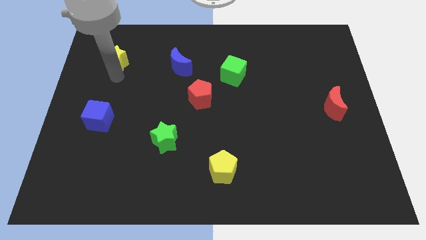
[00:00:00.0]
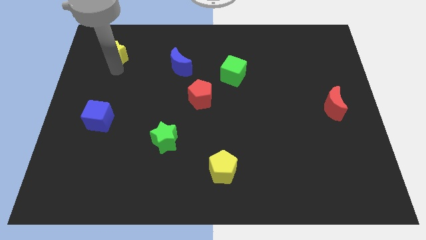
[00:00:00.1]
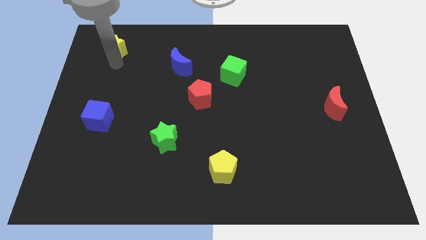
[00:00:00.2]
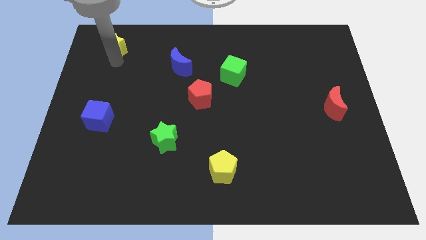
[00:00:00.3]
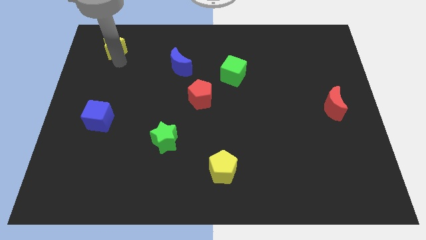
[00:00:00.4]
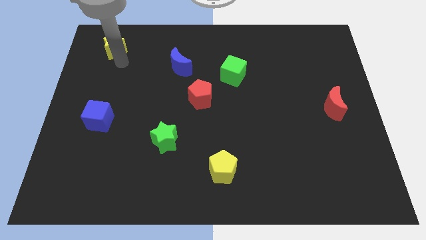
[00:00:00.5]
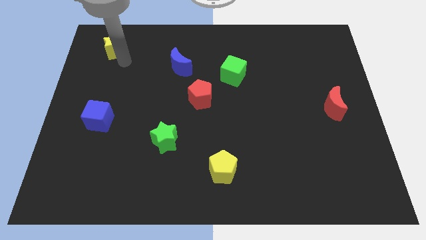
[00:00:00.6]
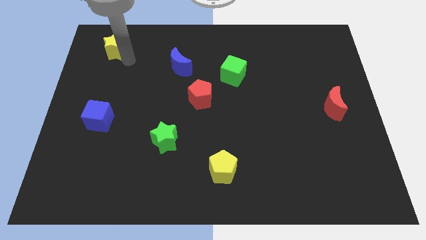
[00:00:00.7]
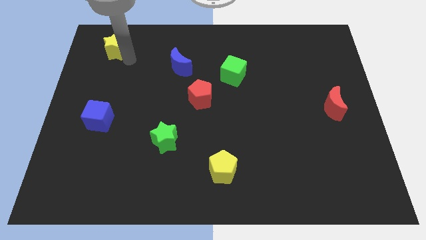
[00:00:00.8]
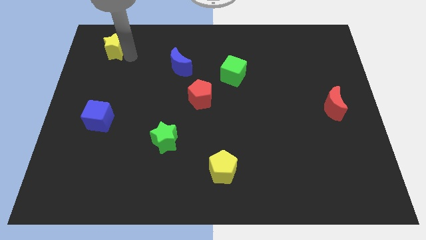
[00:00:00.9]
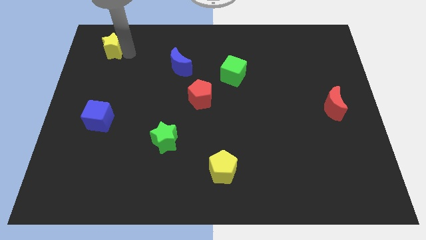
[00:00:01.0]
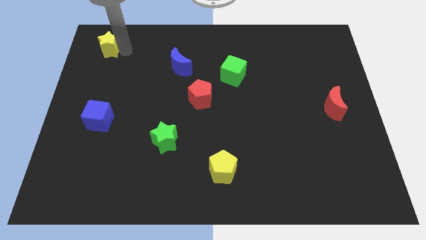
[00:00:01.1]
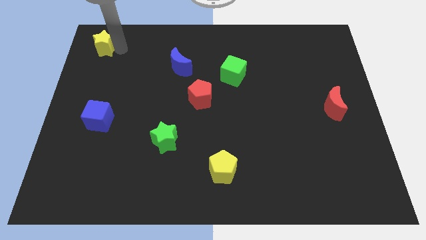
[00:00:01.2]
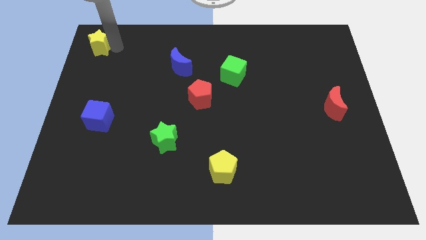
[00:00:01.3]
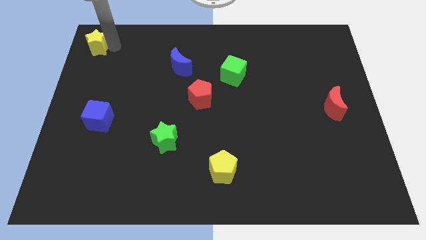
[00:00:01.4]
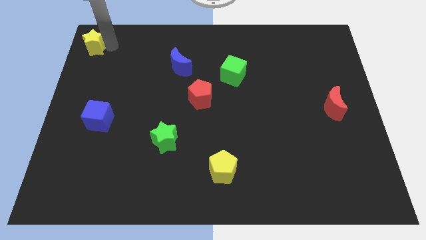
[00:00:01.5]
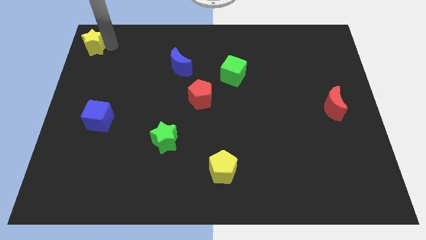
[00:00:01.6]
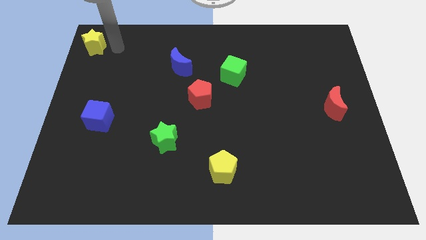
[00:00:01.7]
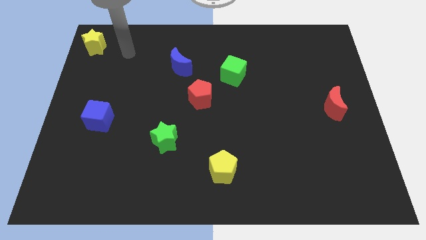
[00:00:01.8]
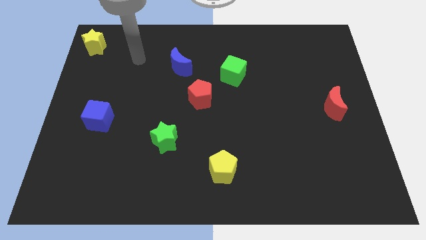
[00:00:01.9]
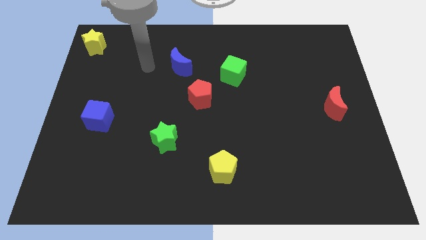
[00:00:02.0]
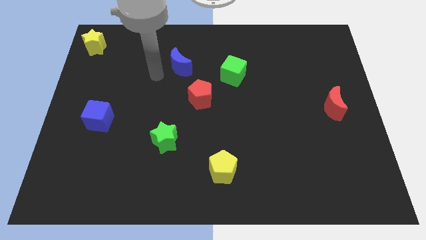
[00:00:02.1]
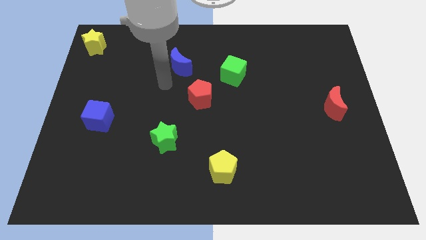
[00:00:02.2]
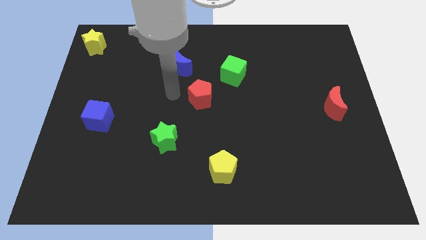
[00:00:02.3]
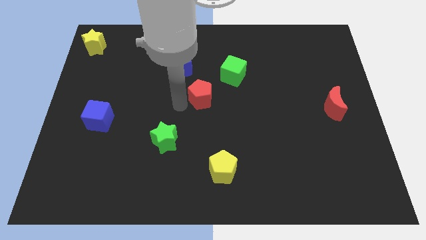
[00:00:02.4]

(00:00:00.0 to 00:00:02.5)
move the yellow star top left corner

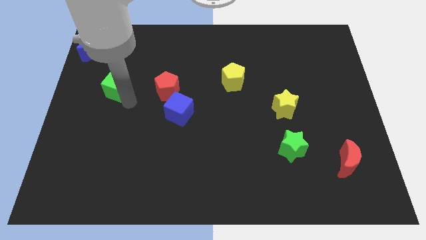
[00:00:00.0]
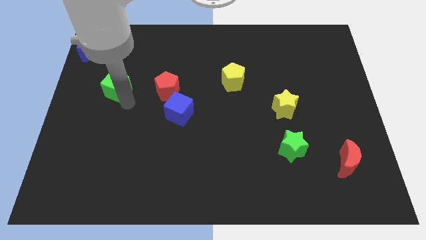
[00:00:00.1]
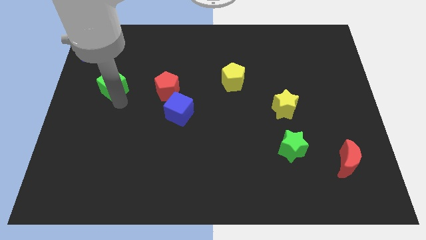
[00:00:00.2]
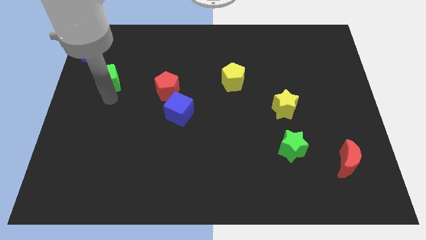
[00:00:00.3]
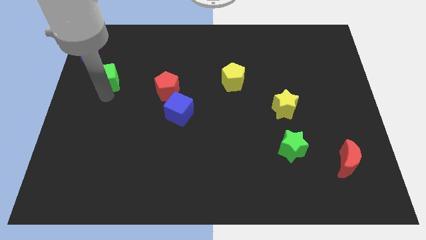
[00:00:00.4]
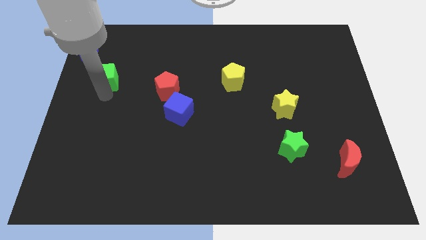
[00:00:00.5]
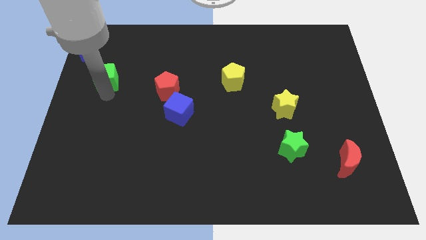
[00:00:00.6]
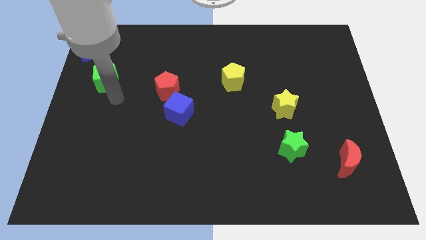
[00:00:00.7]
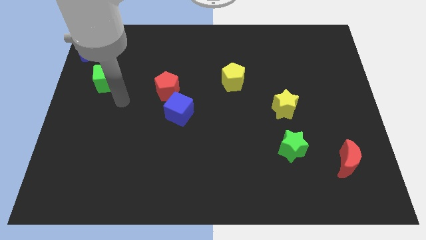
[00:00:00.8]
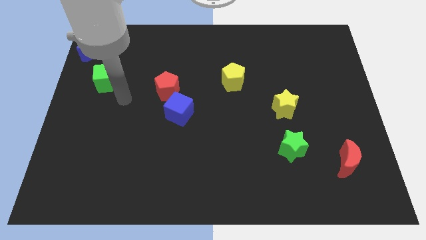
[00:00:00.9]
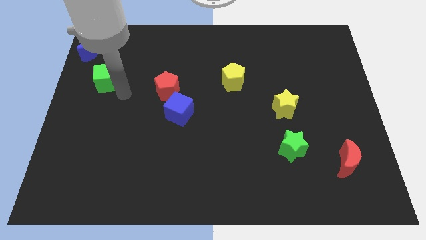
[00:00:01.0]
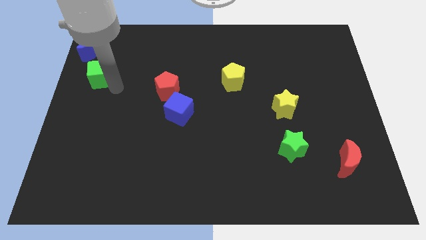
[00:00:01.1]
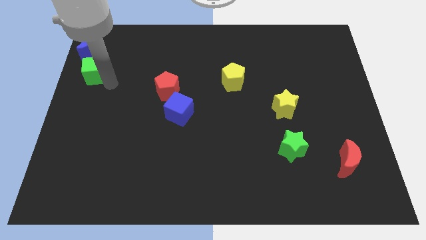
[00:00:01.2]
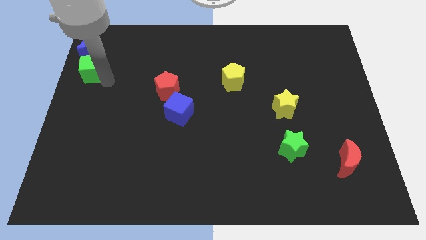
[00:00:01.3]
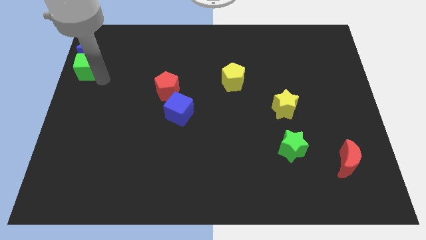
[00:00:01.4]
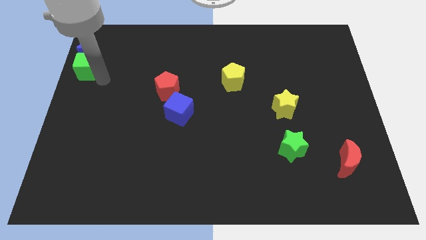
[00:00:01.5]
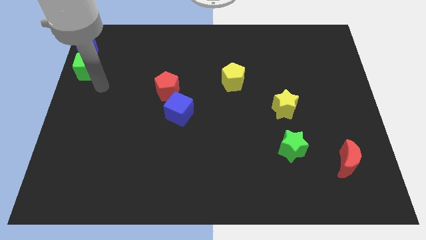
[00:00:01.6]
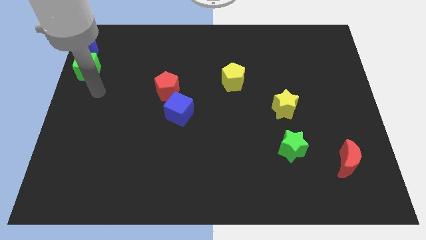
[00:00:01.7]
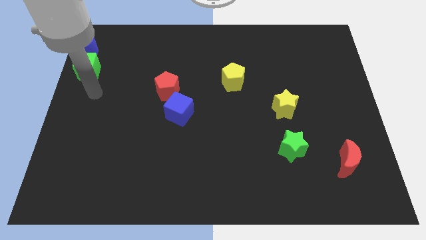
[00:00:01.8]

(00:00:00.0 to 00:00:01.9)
place the green cube below the blue crescent

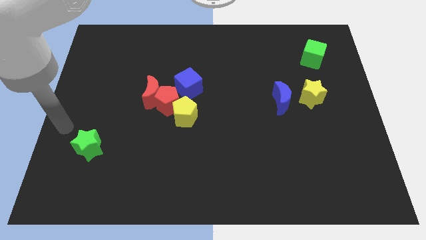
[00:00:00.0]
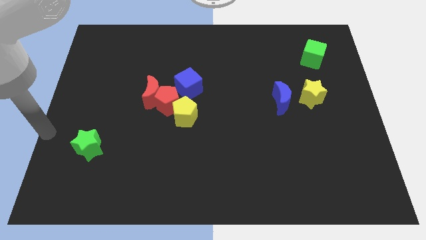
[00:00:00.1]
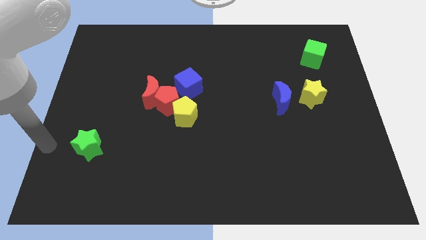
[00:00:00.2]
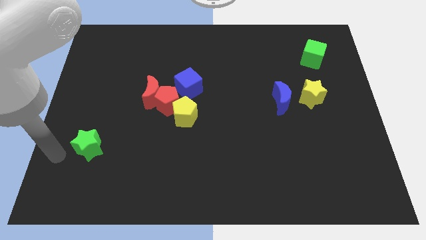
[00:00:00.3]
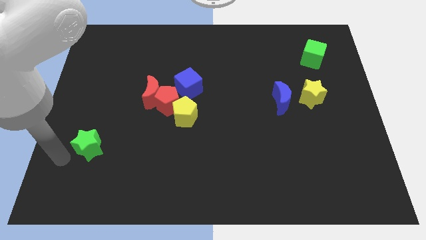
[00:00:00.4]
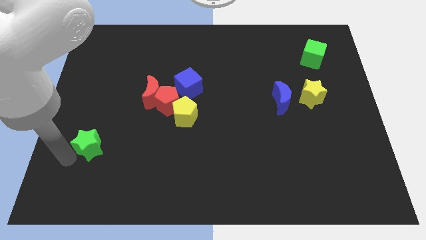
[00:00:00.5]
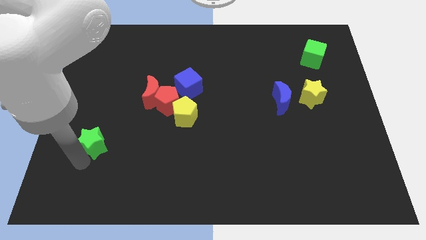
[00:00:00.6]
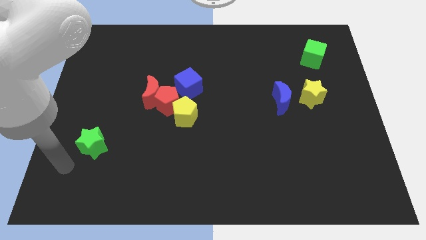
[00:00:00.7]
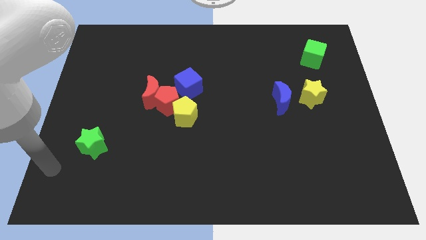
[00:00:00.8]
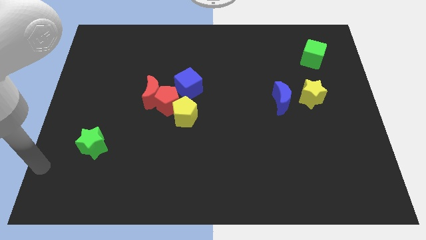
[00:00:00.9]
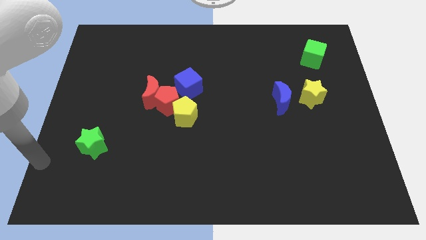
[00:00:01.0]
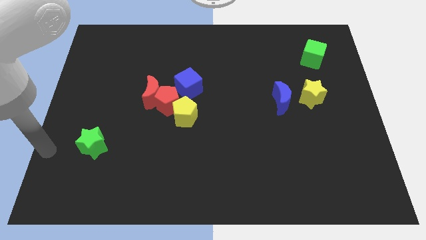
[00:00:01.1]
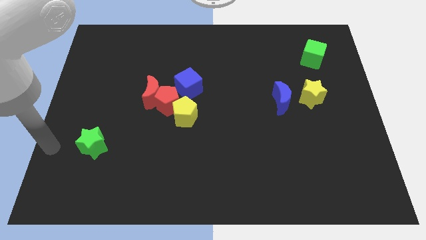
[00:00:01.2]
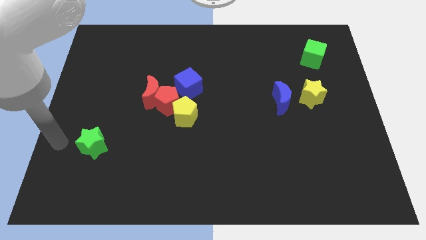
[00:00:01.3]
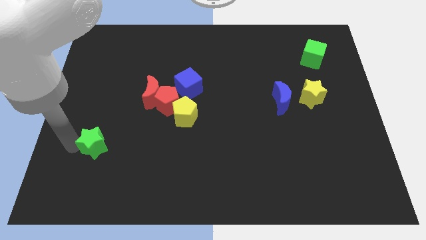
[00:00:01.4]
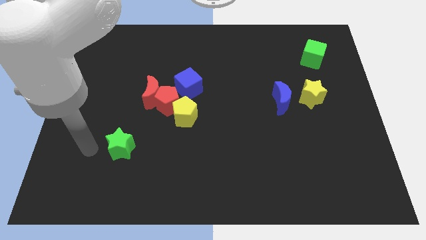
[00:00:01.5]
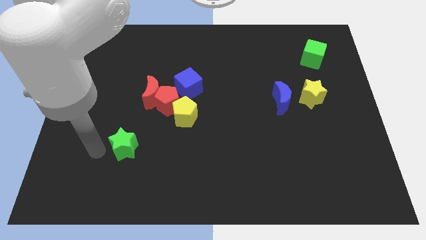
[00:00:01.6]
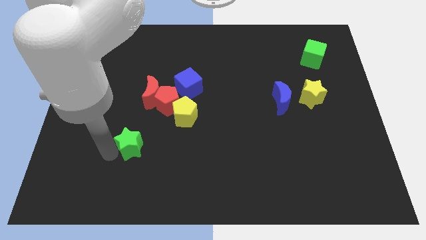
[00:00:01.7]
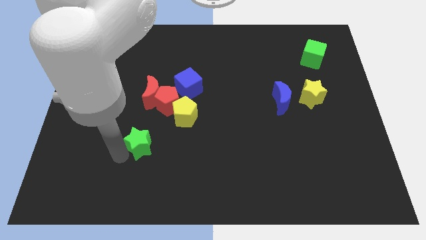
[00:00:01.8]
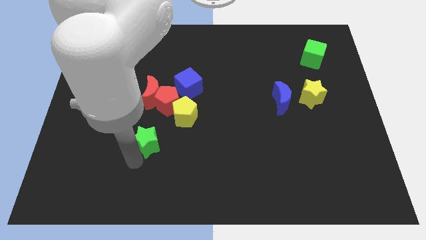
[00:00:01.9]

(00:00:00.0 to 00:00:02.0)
move the green star to the bottom left

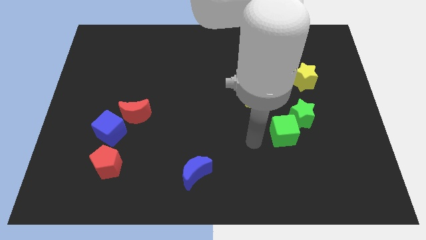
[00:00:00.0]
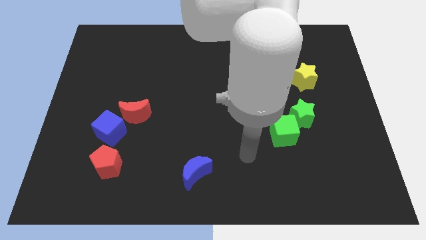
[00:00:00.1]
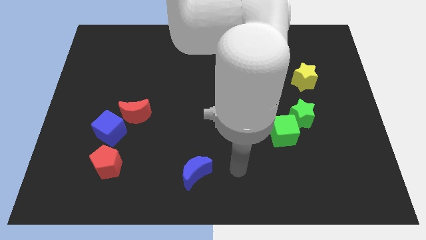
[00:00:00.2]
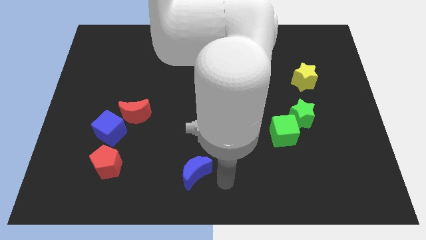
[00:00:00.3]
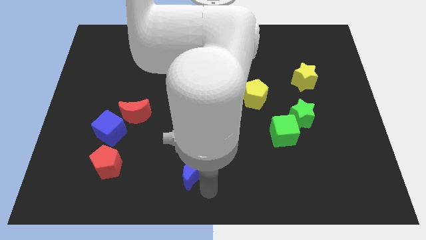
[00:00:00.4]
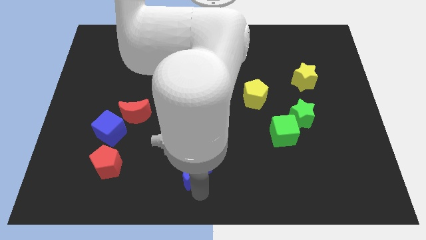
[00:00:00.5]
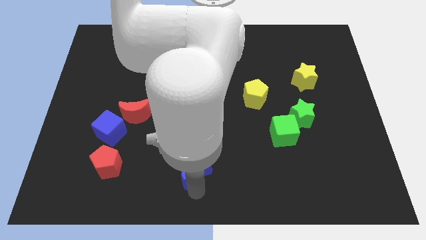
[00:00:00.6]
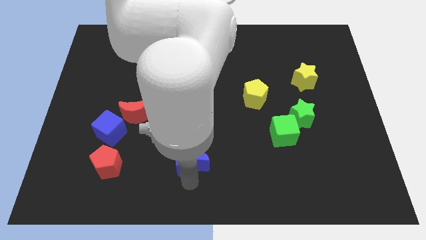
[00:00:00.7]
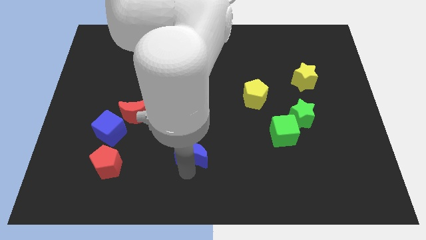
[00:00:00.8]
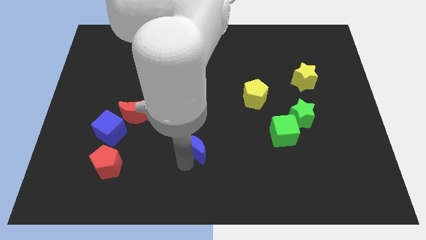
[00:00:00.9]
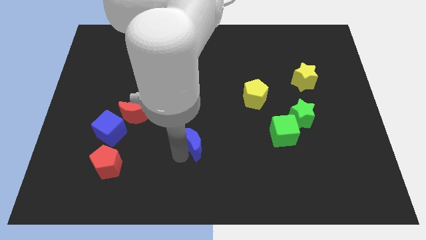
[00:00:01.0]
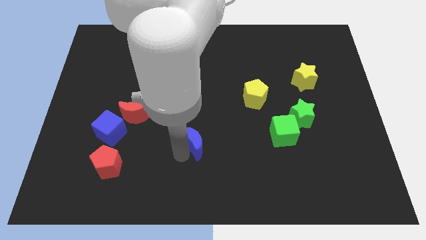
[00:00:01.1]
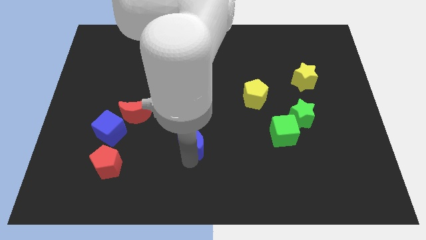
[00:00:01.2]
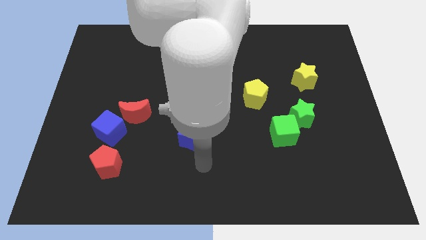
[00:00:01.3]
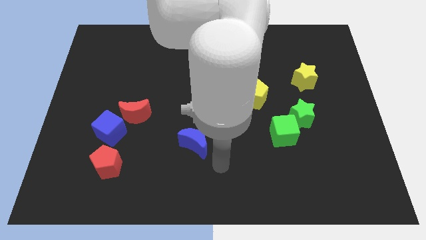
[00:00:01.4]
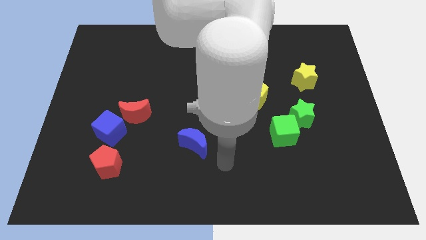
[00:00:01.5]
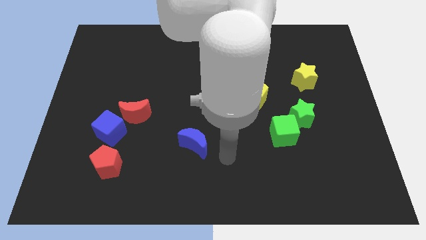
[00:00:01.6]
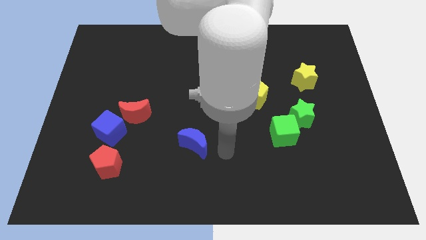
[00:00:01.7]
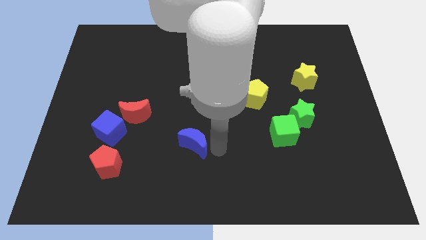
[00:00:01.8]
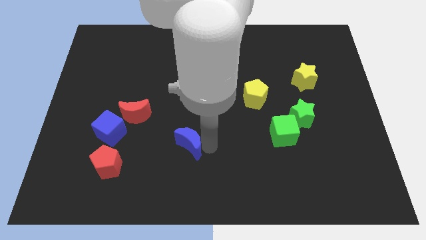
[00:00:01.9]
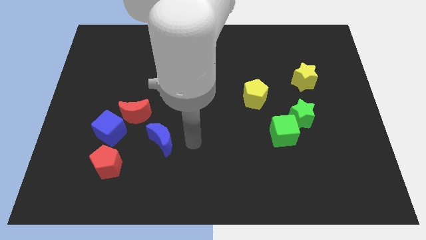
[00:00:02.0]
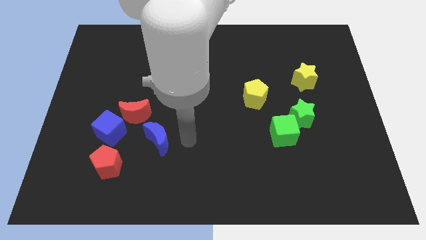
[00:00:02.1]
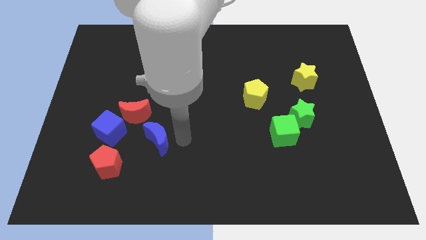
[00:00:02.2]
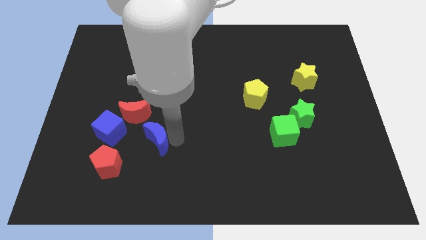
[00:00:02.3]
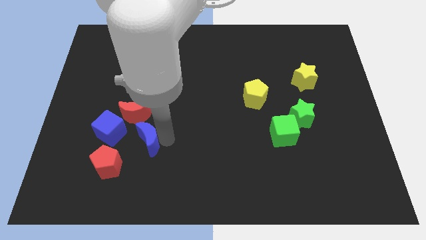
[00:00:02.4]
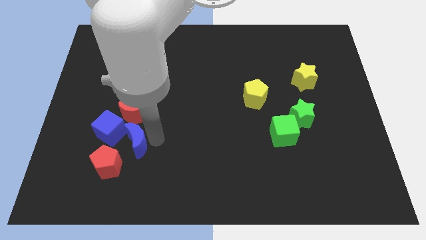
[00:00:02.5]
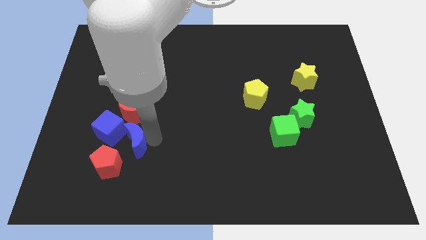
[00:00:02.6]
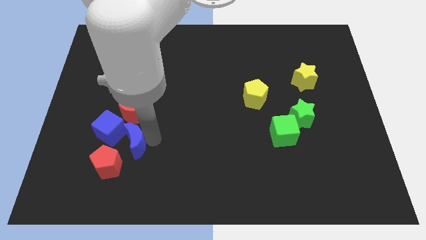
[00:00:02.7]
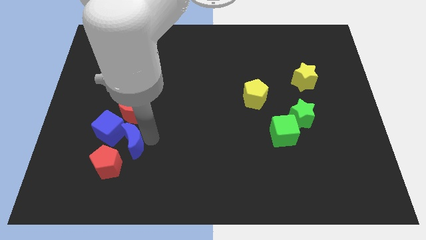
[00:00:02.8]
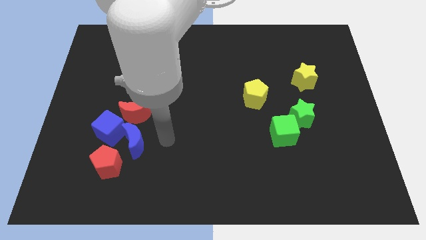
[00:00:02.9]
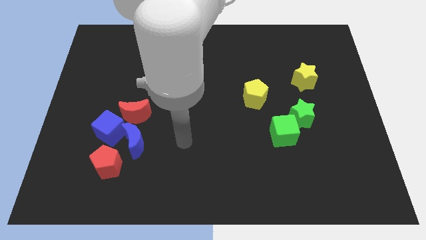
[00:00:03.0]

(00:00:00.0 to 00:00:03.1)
move the blue moon vertically below the red moon
